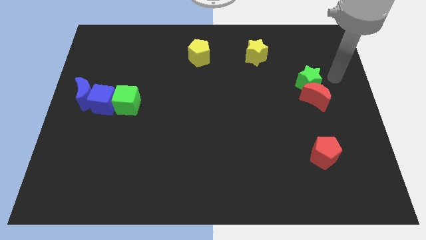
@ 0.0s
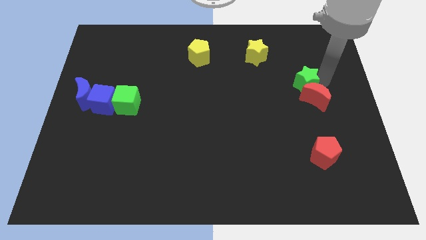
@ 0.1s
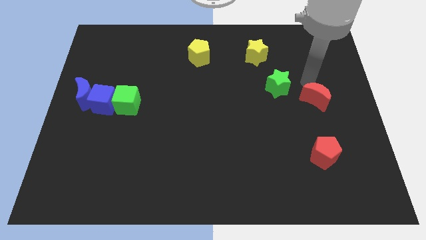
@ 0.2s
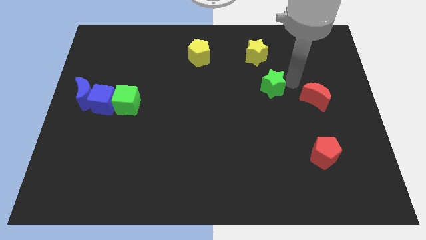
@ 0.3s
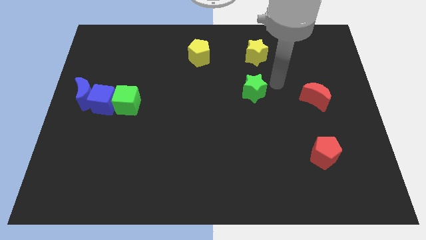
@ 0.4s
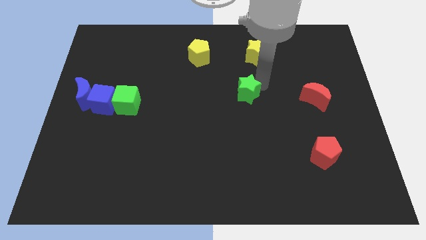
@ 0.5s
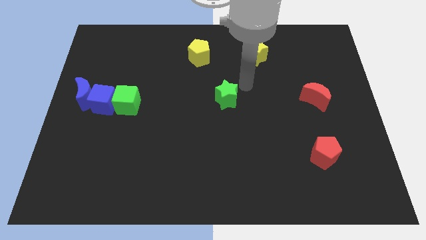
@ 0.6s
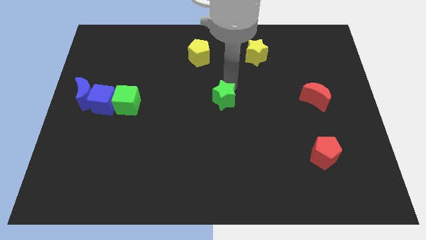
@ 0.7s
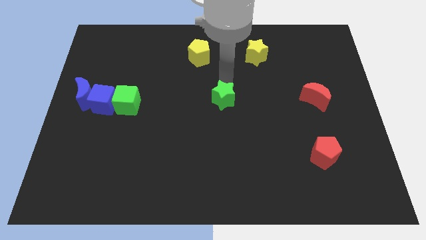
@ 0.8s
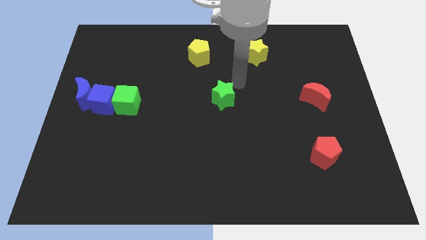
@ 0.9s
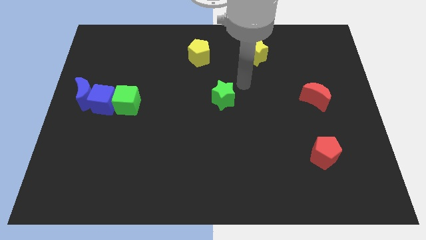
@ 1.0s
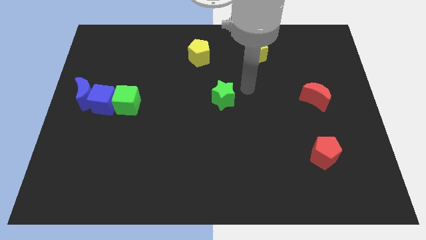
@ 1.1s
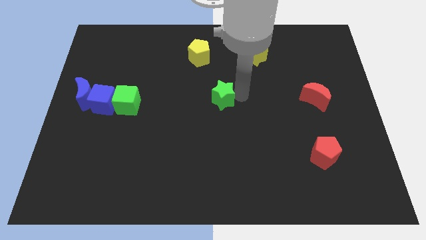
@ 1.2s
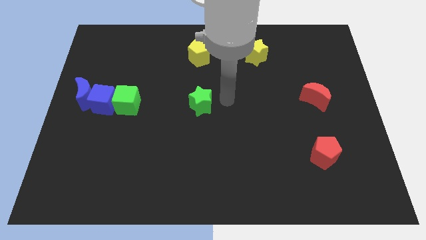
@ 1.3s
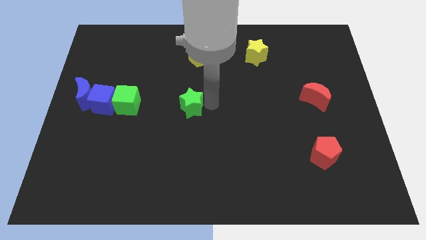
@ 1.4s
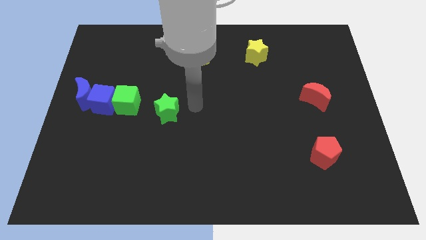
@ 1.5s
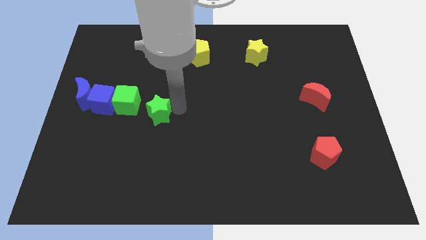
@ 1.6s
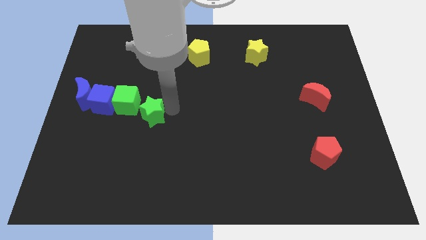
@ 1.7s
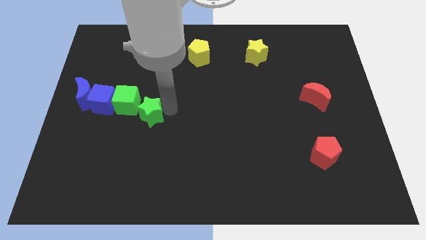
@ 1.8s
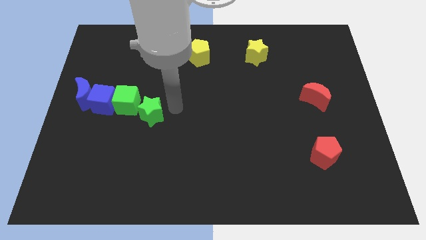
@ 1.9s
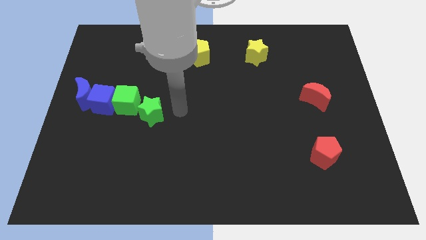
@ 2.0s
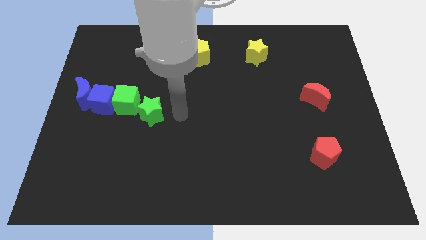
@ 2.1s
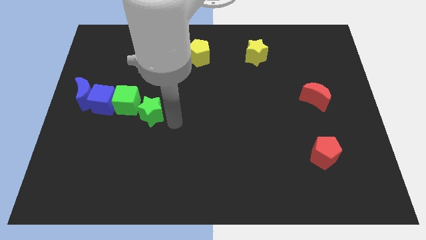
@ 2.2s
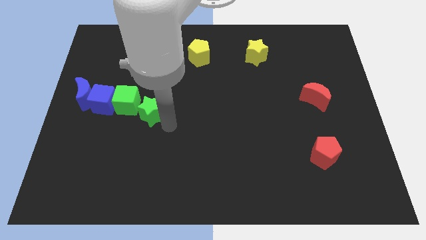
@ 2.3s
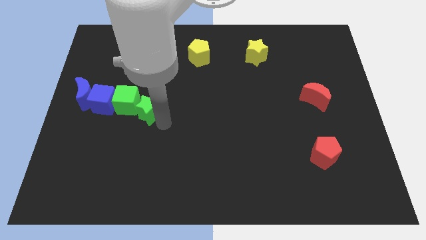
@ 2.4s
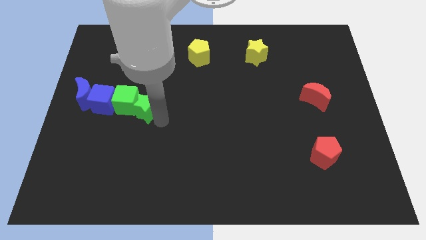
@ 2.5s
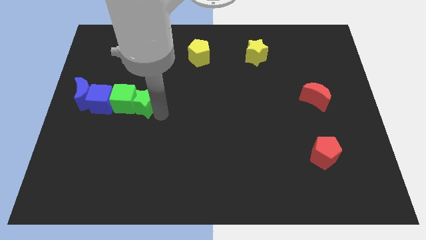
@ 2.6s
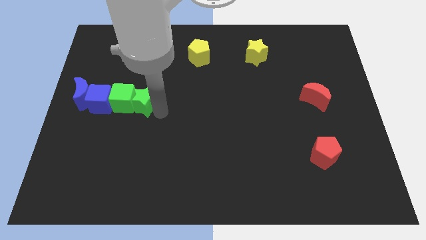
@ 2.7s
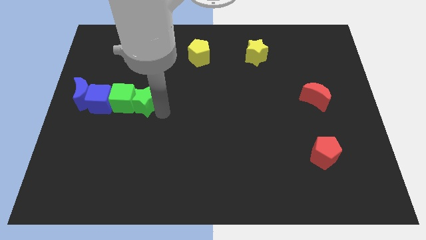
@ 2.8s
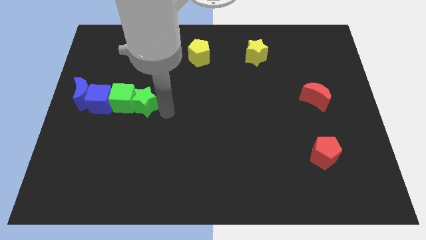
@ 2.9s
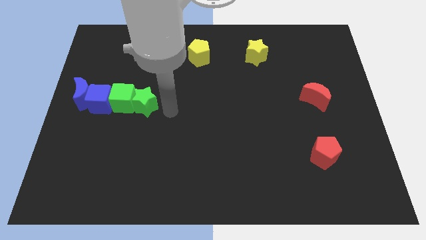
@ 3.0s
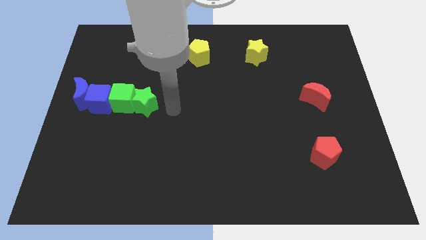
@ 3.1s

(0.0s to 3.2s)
place green star into green cube

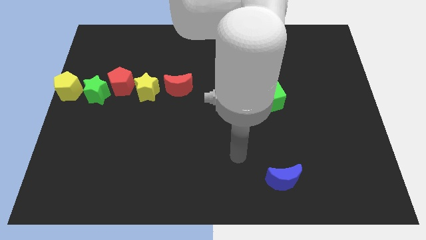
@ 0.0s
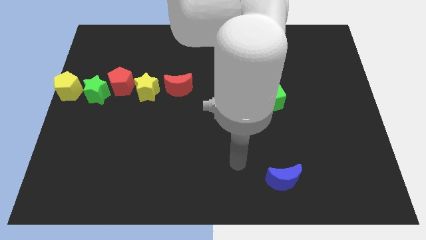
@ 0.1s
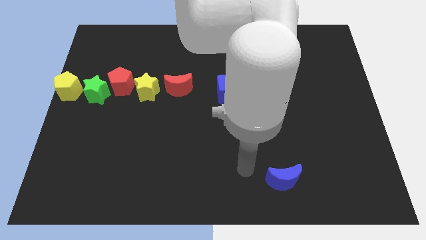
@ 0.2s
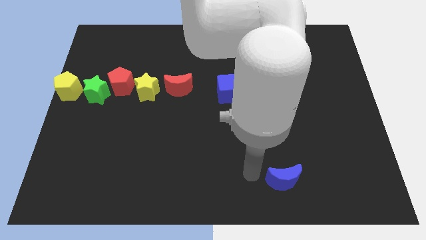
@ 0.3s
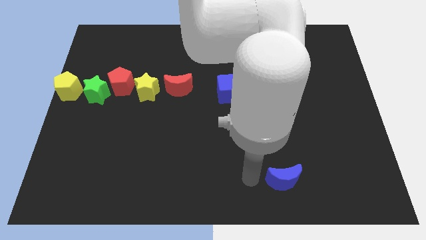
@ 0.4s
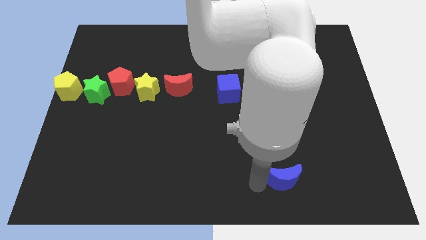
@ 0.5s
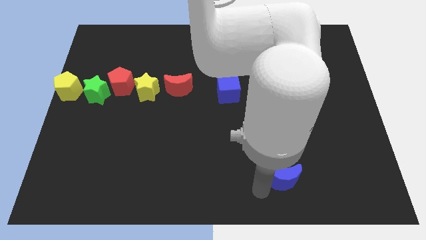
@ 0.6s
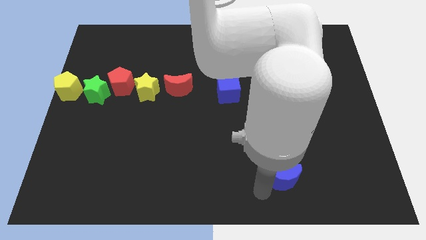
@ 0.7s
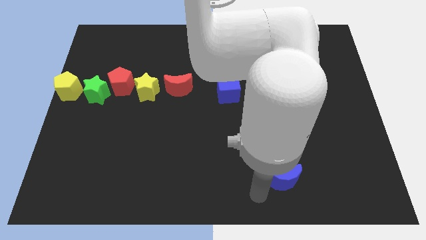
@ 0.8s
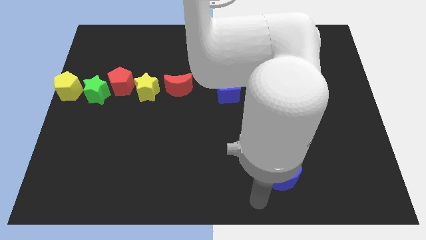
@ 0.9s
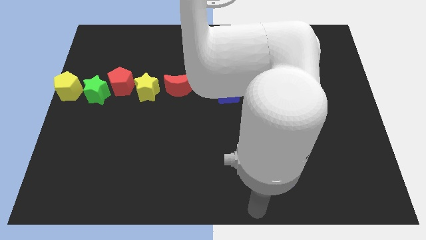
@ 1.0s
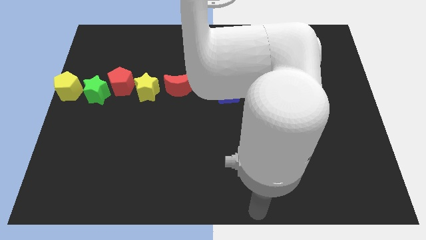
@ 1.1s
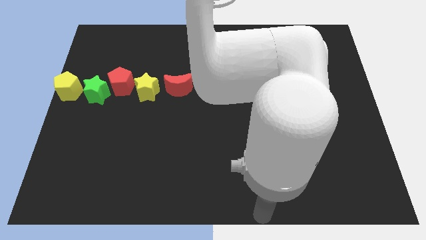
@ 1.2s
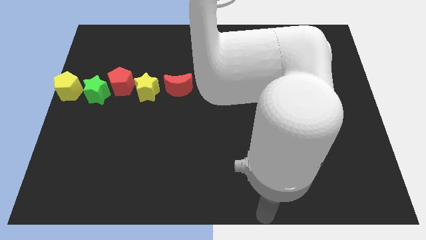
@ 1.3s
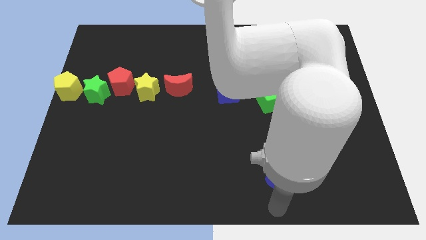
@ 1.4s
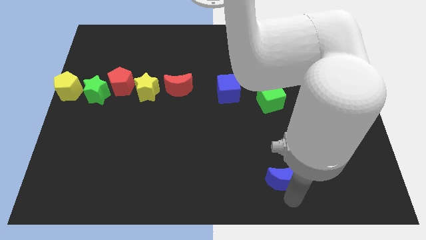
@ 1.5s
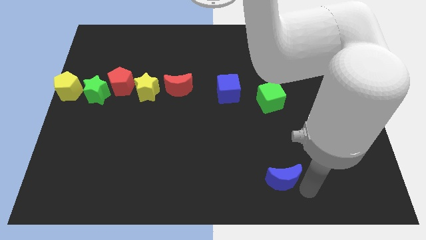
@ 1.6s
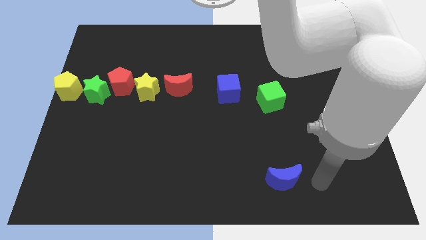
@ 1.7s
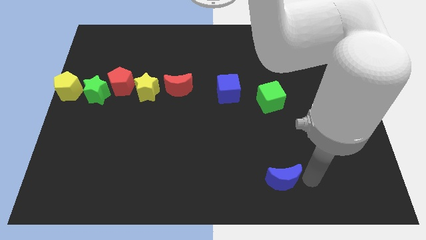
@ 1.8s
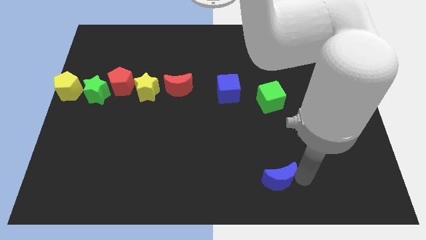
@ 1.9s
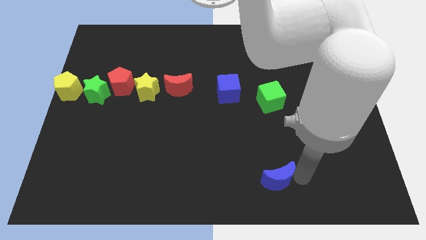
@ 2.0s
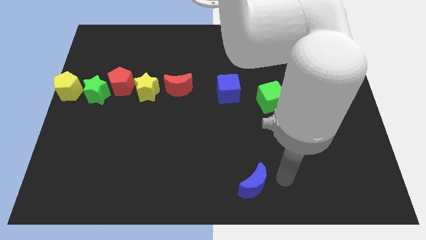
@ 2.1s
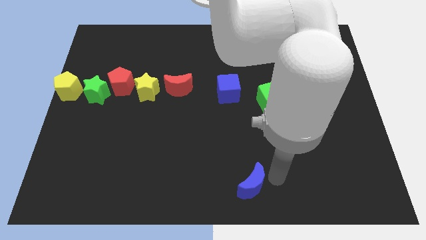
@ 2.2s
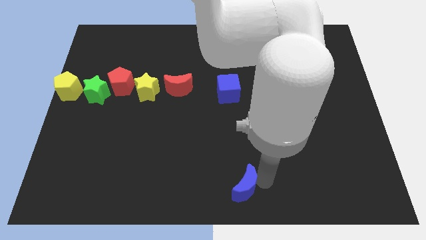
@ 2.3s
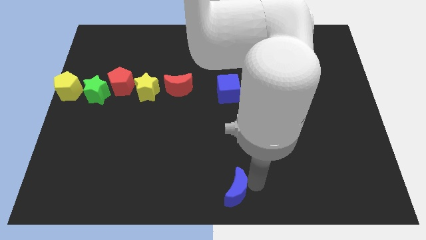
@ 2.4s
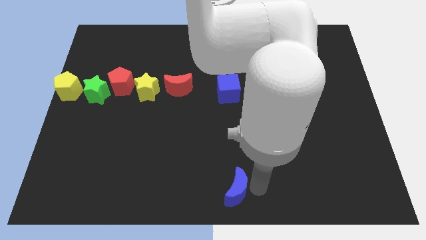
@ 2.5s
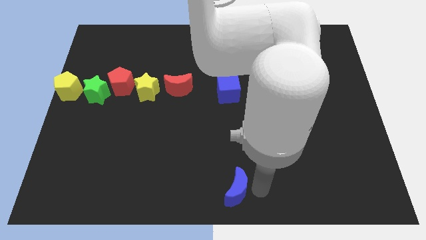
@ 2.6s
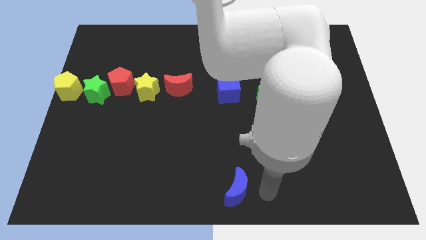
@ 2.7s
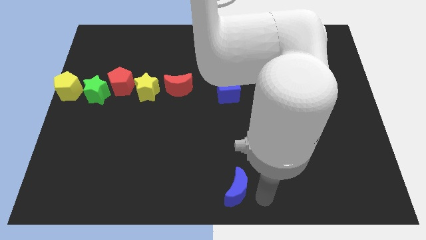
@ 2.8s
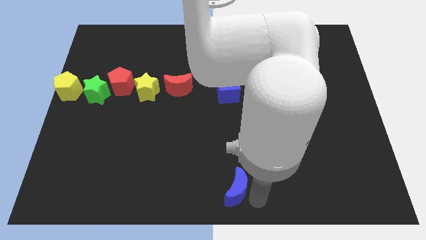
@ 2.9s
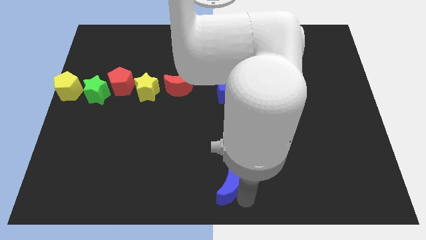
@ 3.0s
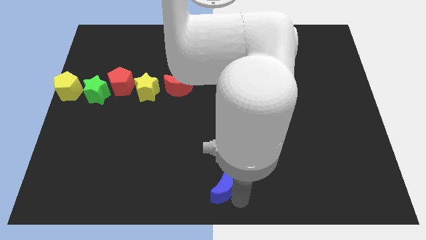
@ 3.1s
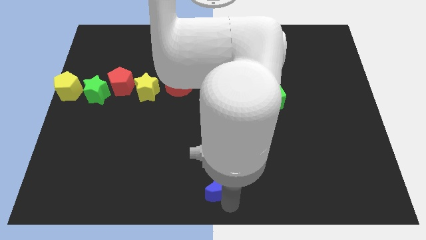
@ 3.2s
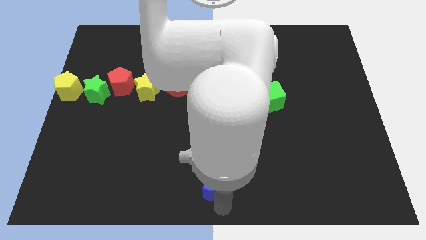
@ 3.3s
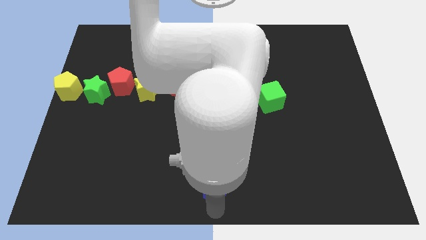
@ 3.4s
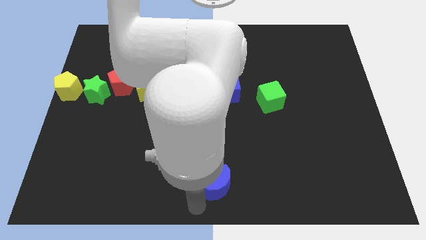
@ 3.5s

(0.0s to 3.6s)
move the blue moon to the bottom center

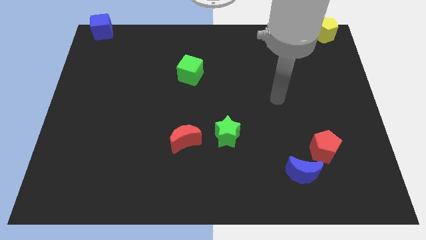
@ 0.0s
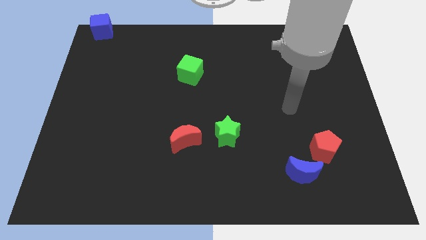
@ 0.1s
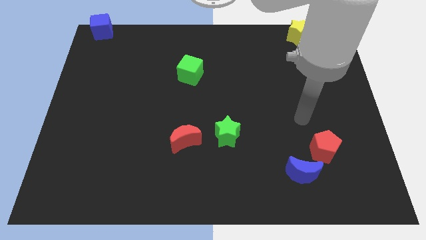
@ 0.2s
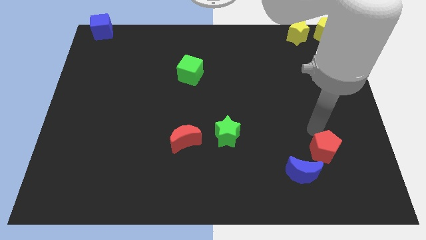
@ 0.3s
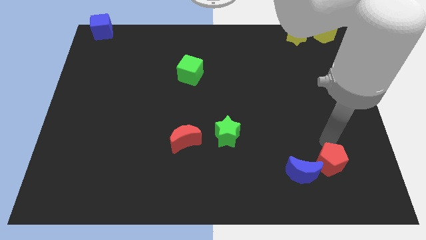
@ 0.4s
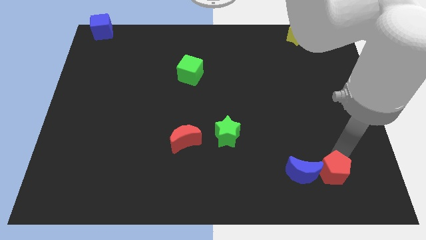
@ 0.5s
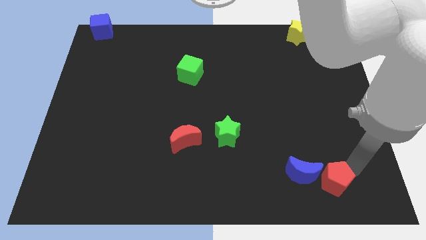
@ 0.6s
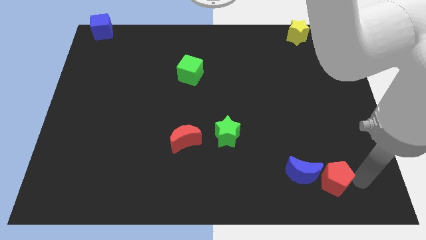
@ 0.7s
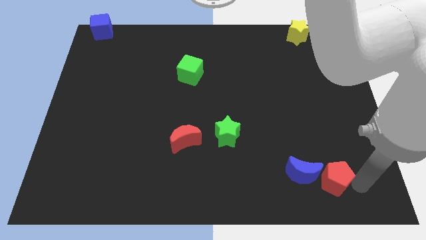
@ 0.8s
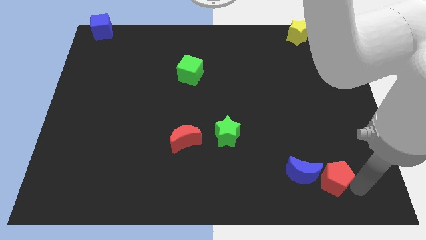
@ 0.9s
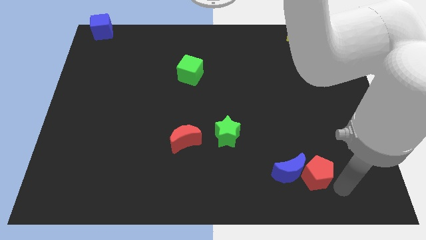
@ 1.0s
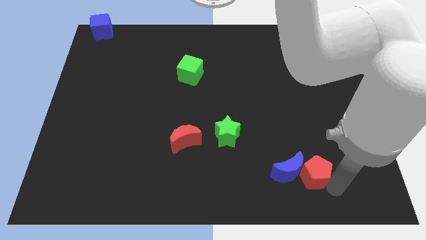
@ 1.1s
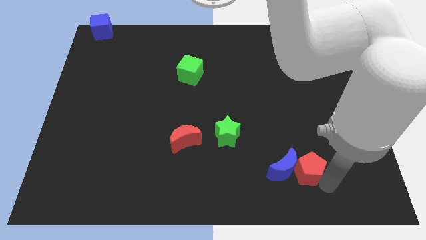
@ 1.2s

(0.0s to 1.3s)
slightly push the red pentagon towards down

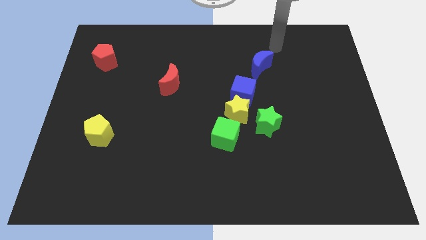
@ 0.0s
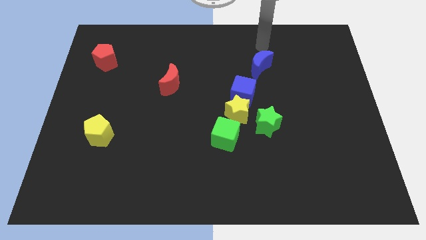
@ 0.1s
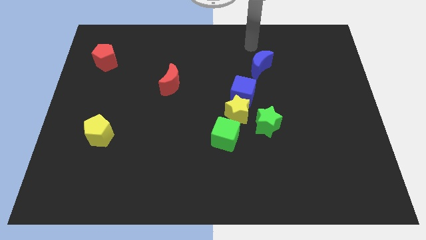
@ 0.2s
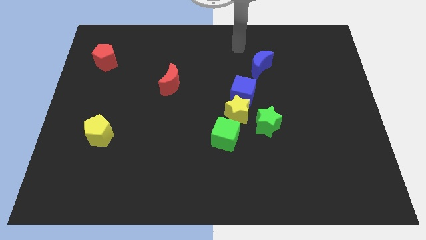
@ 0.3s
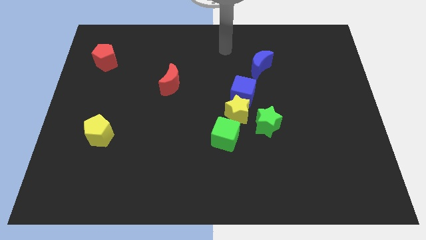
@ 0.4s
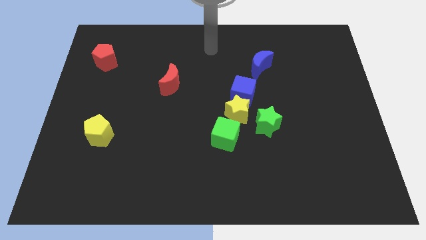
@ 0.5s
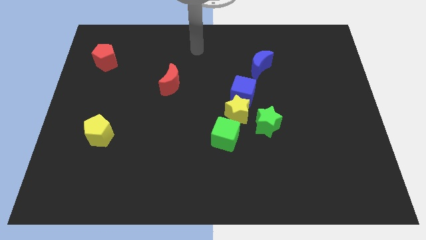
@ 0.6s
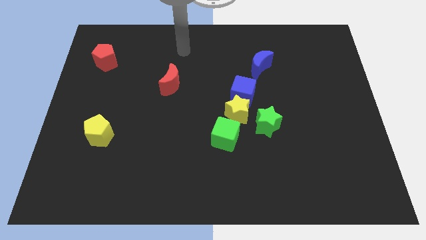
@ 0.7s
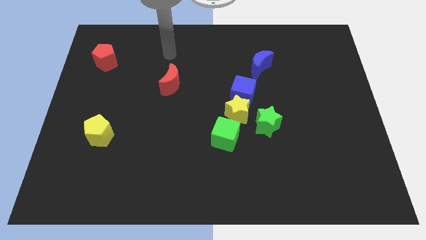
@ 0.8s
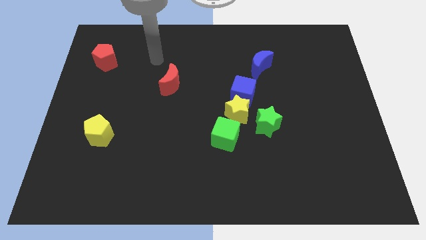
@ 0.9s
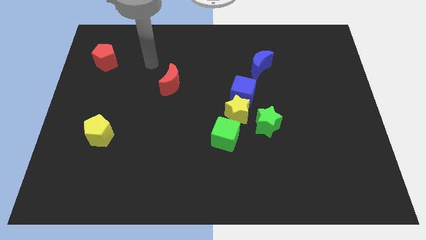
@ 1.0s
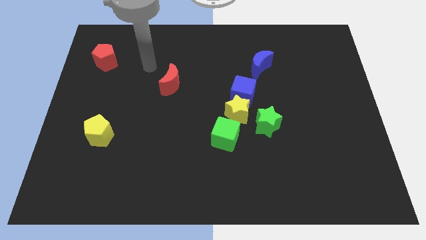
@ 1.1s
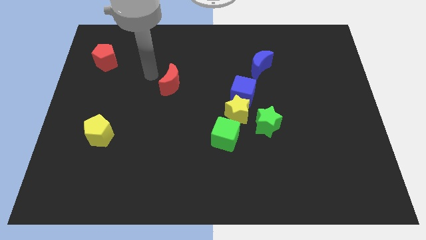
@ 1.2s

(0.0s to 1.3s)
move your arm towards the red crescent
